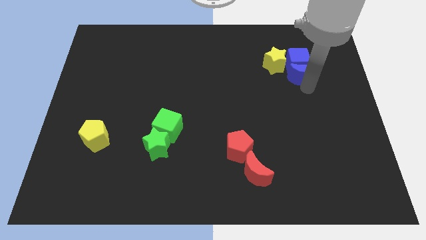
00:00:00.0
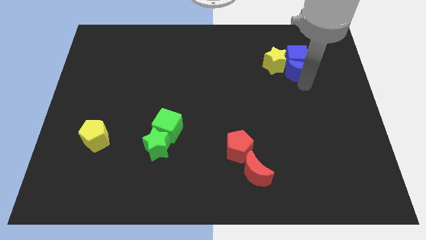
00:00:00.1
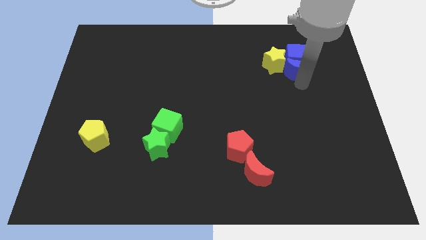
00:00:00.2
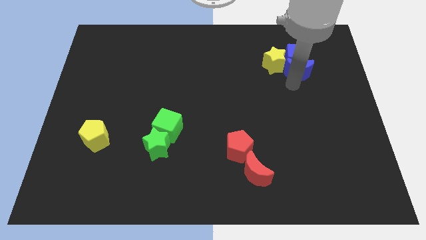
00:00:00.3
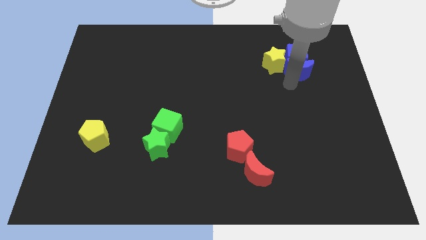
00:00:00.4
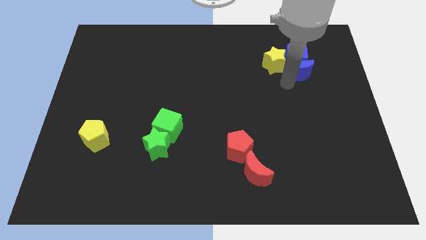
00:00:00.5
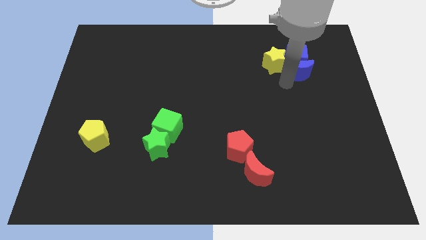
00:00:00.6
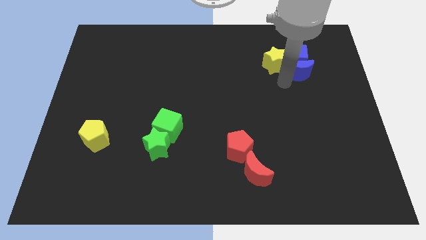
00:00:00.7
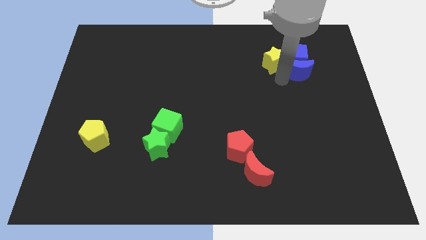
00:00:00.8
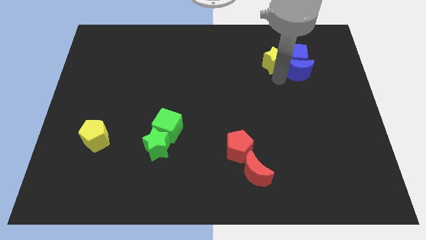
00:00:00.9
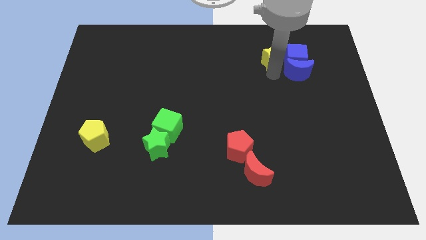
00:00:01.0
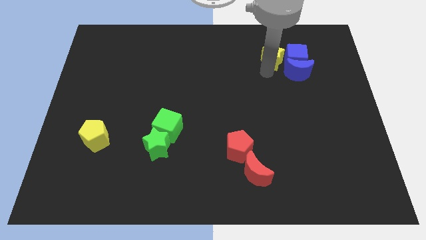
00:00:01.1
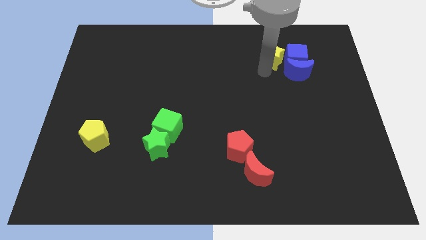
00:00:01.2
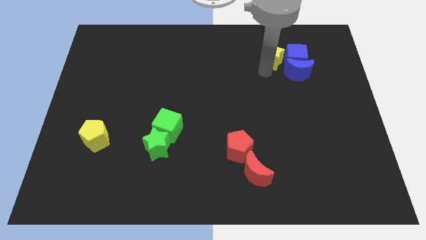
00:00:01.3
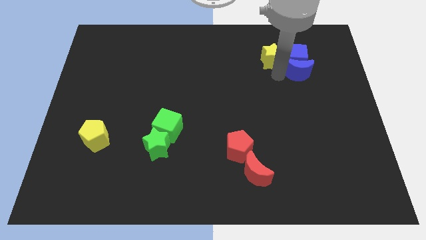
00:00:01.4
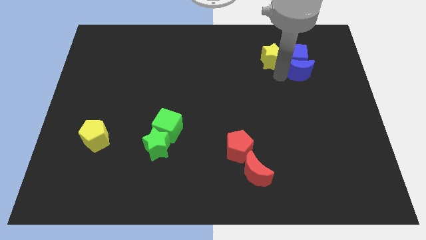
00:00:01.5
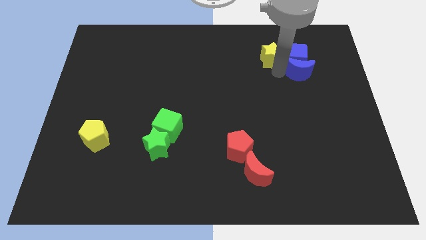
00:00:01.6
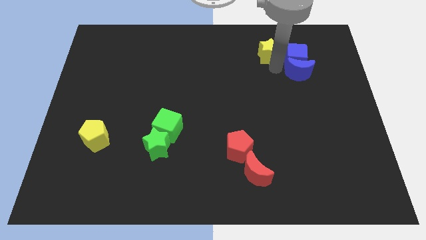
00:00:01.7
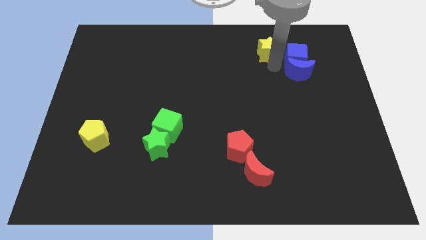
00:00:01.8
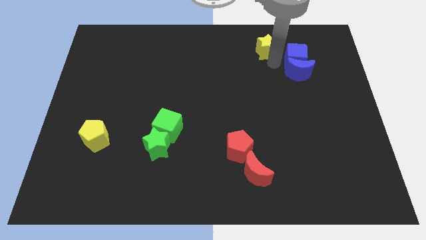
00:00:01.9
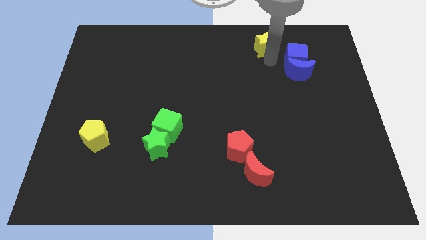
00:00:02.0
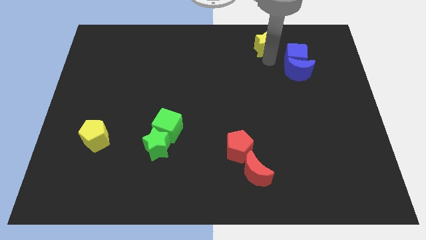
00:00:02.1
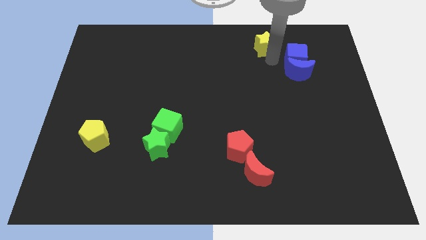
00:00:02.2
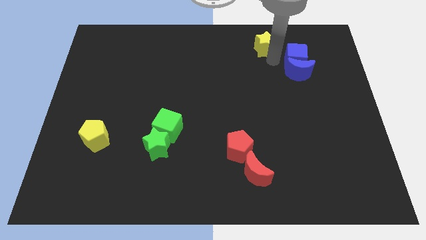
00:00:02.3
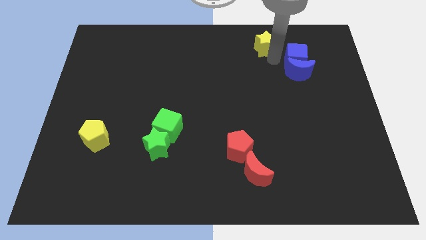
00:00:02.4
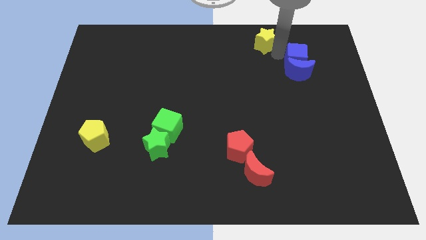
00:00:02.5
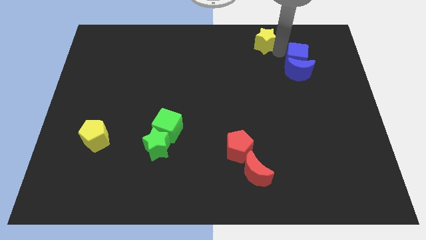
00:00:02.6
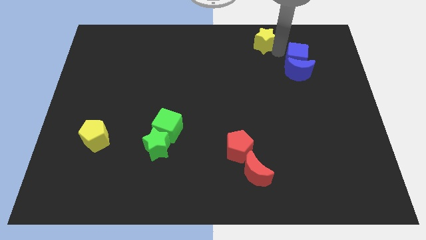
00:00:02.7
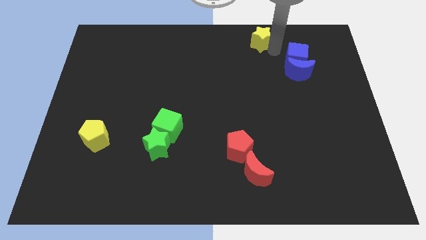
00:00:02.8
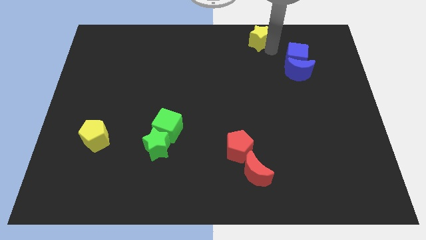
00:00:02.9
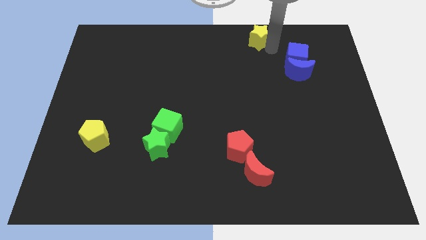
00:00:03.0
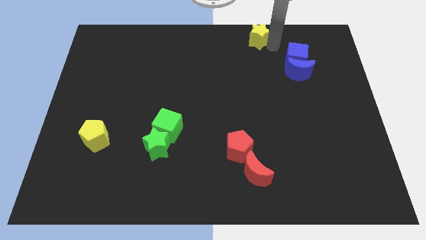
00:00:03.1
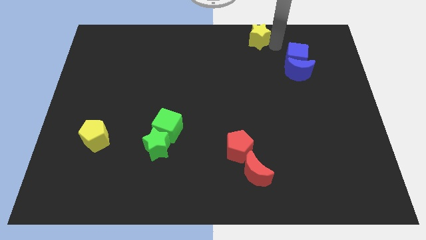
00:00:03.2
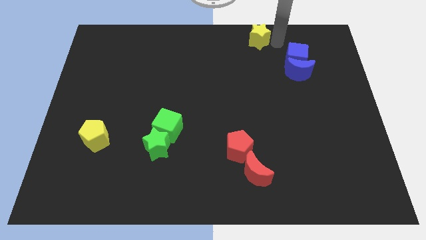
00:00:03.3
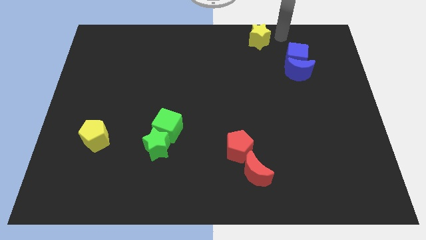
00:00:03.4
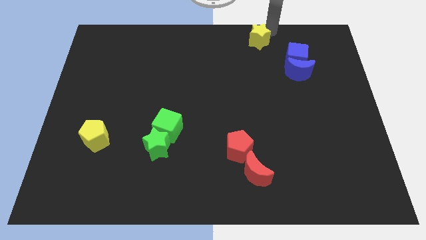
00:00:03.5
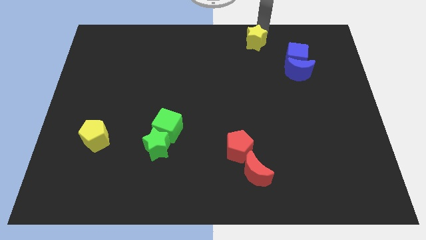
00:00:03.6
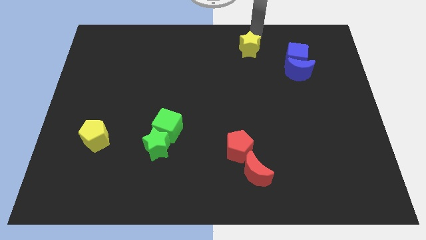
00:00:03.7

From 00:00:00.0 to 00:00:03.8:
push the yellow star to the top of the board

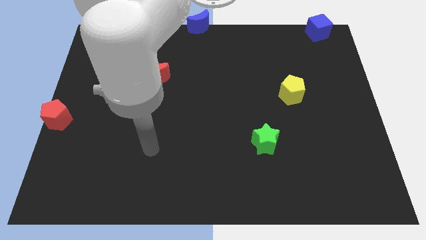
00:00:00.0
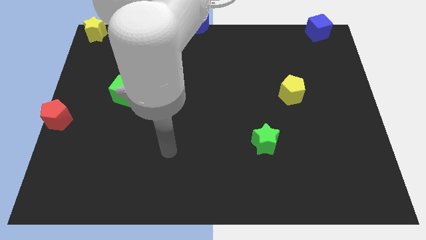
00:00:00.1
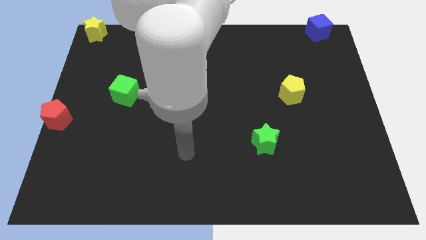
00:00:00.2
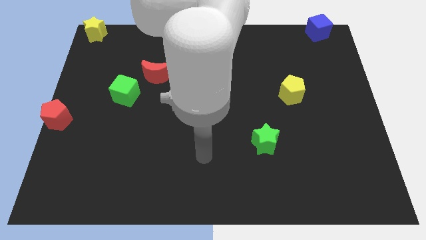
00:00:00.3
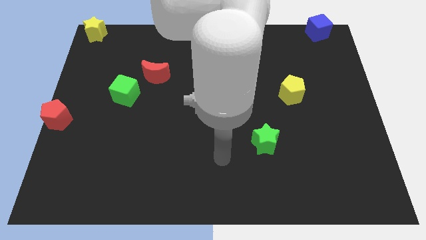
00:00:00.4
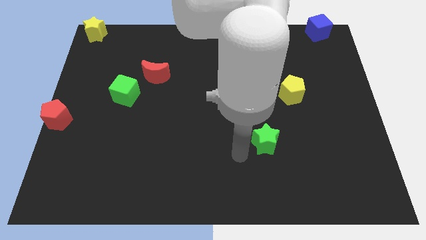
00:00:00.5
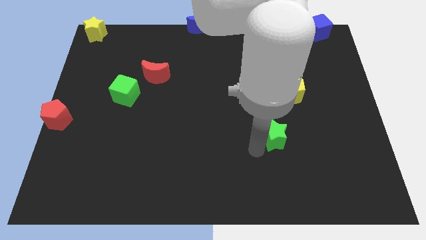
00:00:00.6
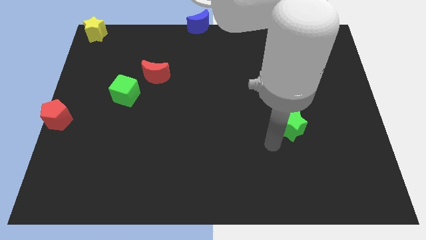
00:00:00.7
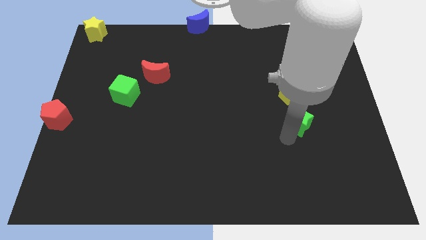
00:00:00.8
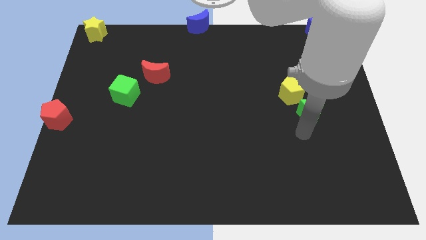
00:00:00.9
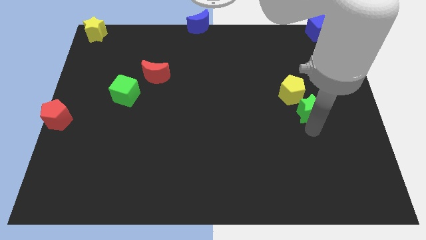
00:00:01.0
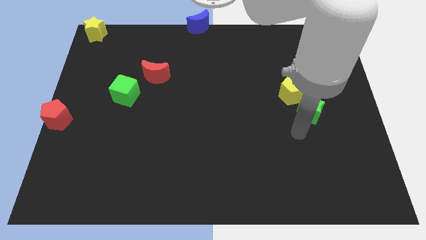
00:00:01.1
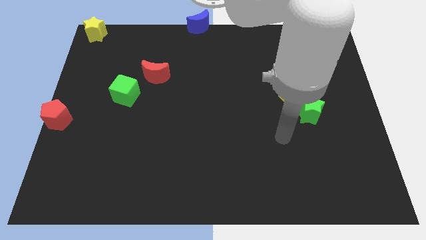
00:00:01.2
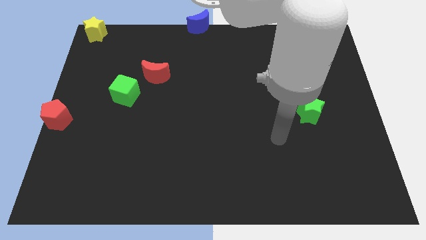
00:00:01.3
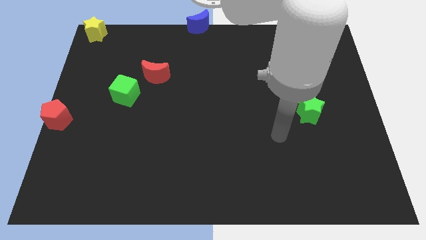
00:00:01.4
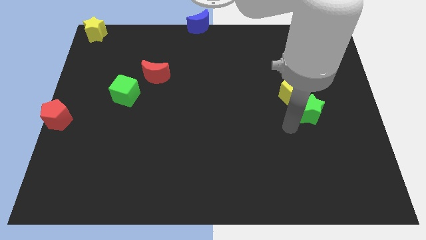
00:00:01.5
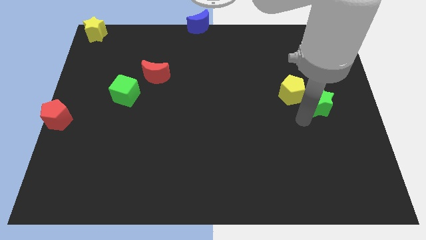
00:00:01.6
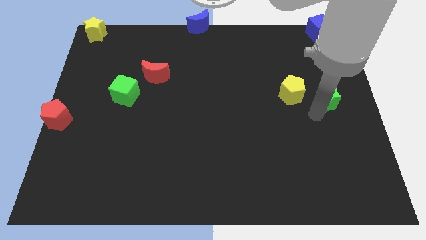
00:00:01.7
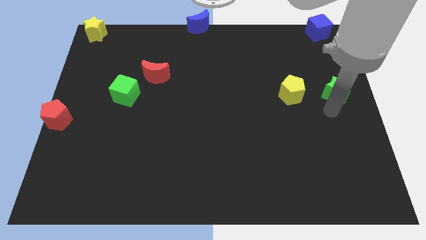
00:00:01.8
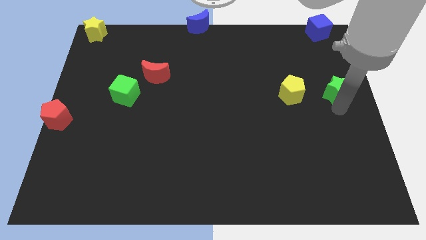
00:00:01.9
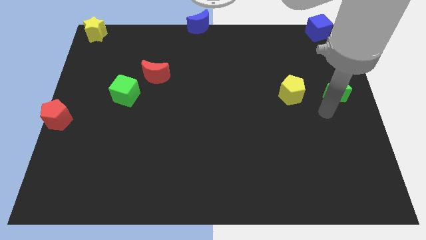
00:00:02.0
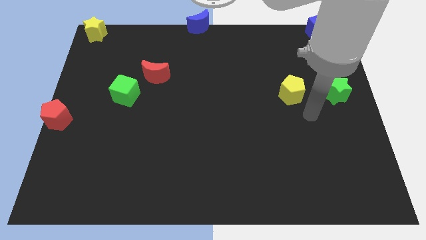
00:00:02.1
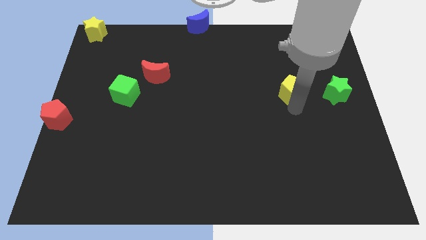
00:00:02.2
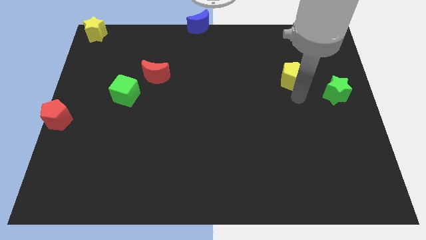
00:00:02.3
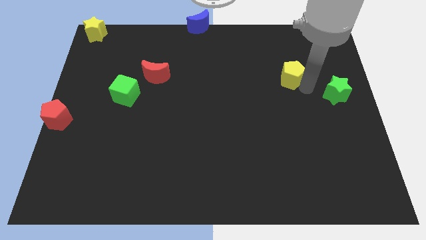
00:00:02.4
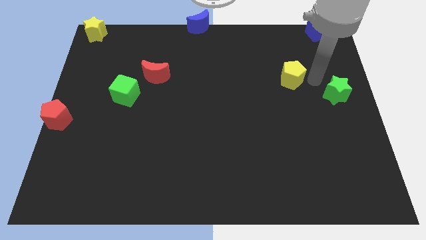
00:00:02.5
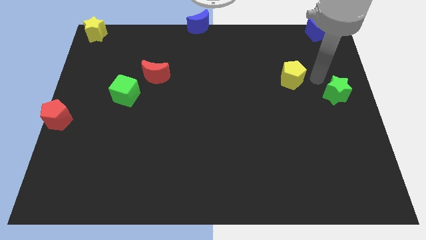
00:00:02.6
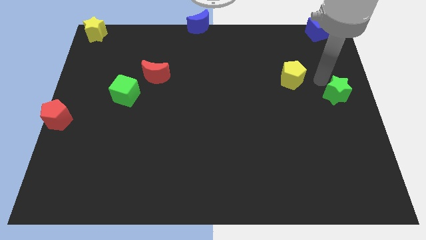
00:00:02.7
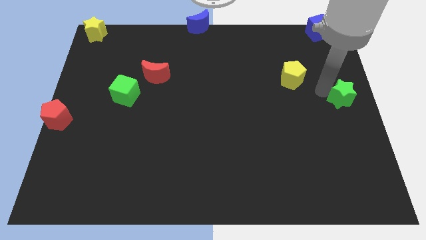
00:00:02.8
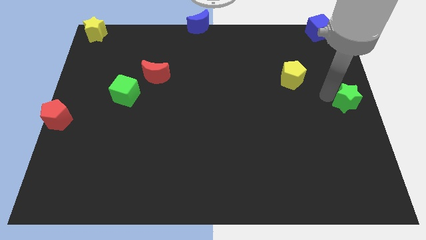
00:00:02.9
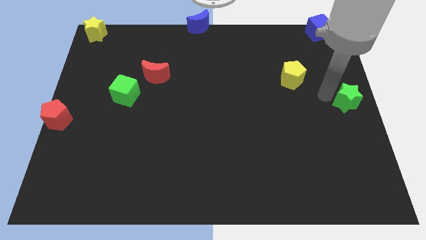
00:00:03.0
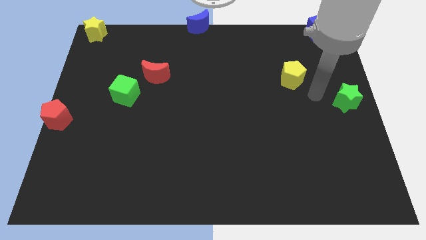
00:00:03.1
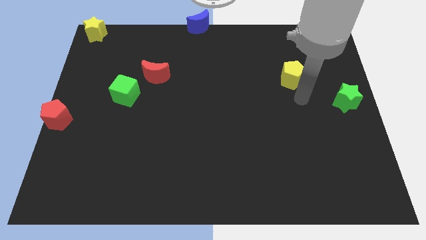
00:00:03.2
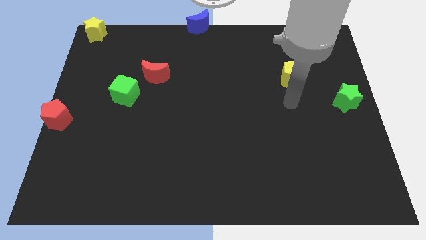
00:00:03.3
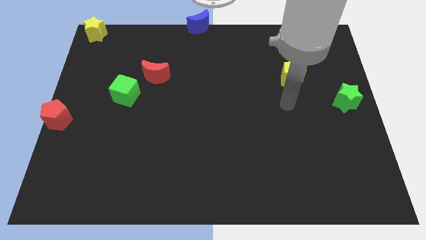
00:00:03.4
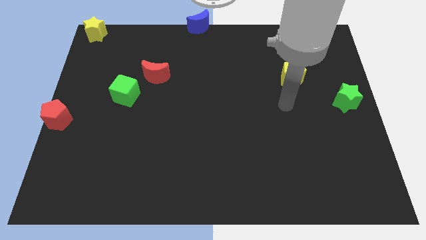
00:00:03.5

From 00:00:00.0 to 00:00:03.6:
push the green star to the center right

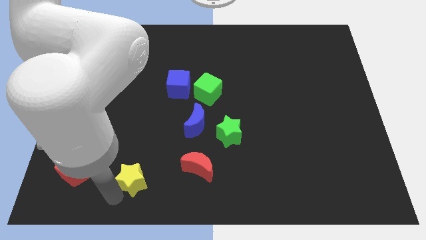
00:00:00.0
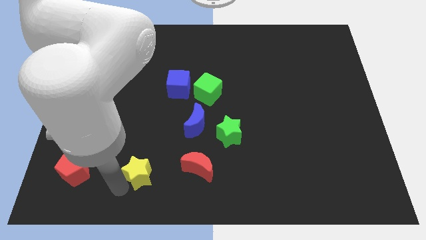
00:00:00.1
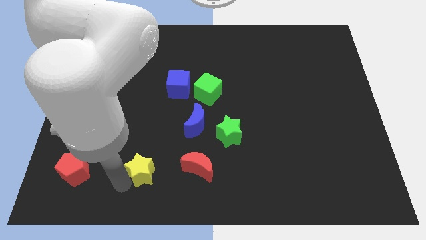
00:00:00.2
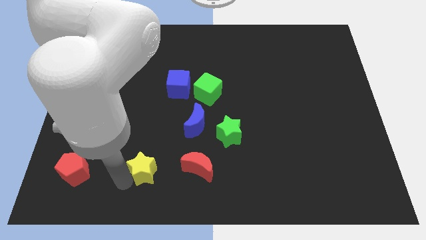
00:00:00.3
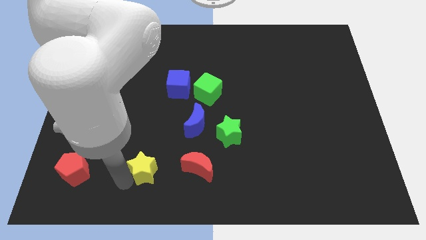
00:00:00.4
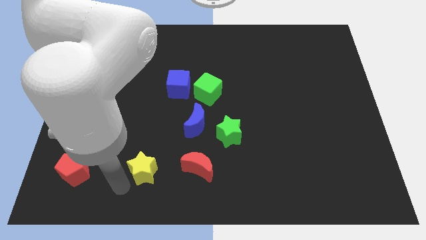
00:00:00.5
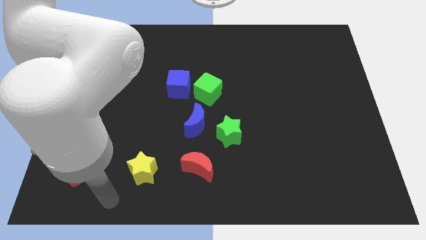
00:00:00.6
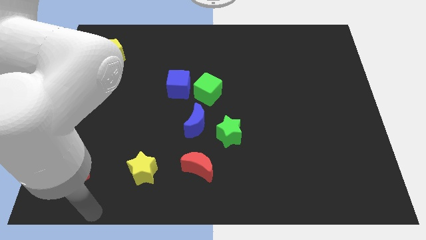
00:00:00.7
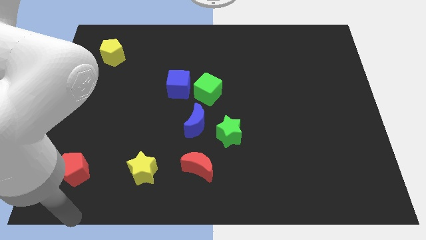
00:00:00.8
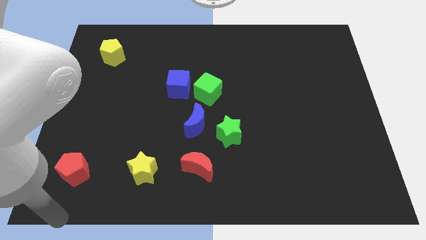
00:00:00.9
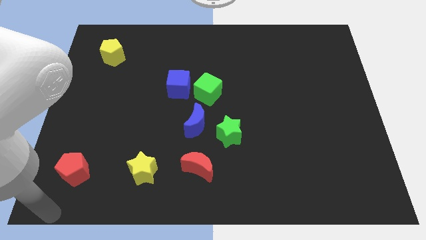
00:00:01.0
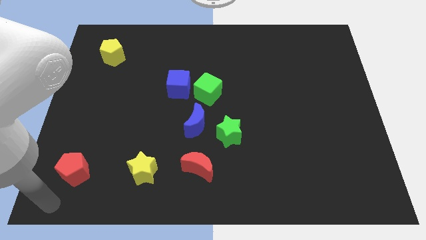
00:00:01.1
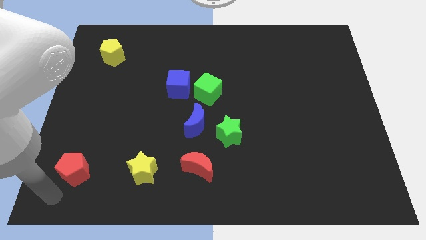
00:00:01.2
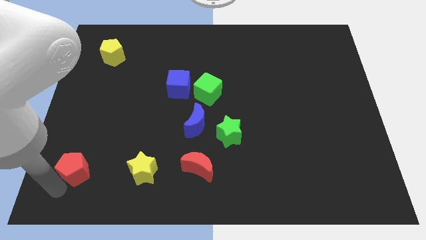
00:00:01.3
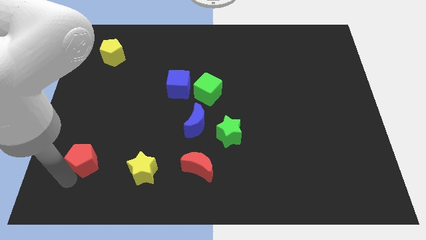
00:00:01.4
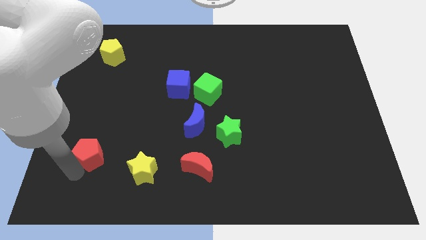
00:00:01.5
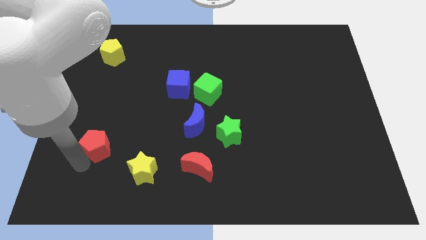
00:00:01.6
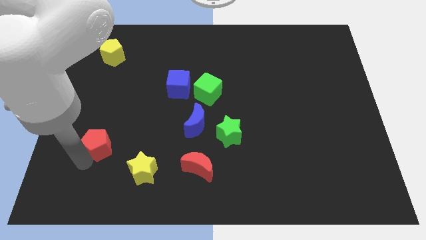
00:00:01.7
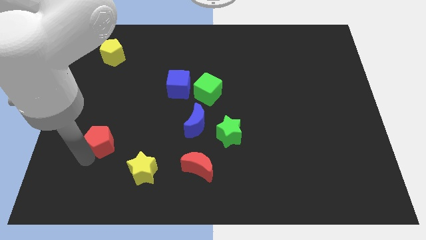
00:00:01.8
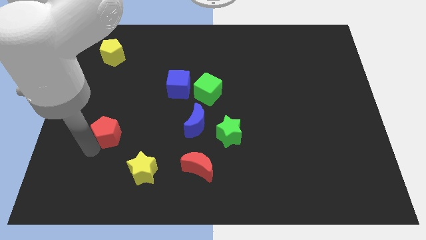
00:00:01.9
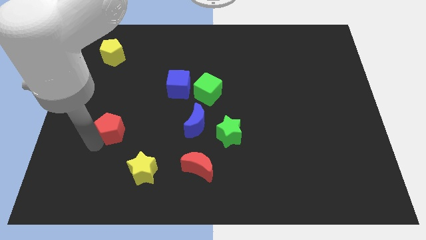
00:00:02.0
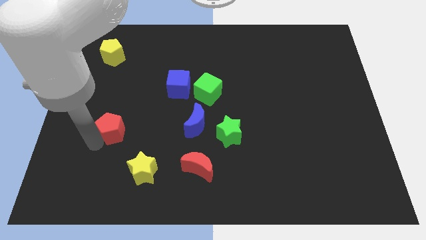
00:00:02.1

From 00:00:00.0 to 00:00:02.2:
move the red pentagon horizontally to the left side of the blue crescent
